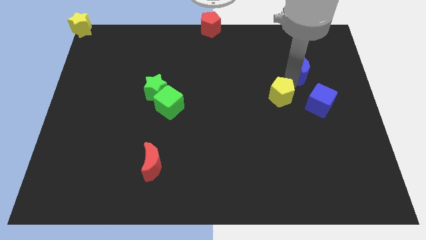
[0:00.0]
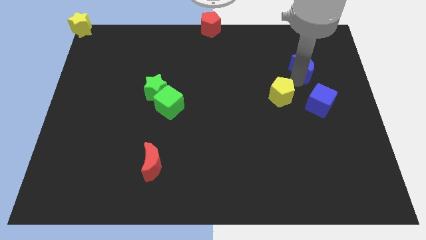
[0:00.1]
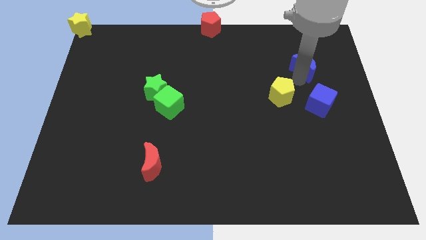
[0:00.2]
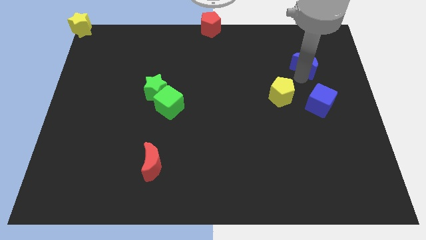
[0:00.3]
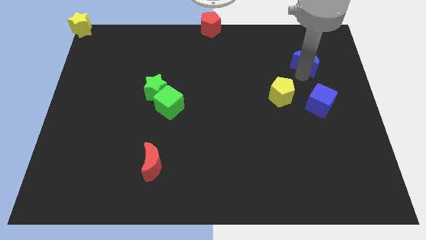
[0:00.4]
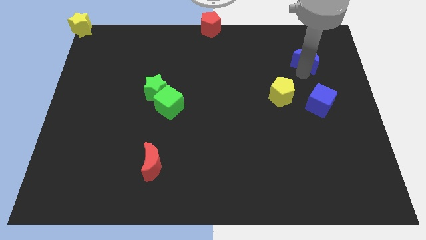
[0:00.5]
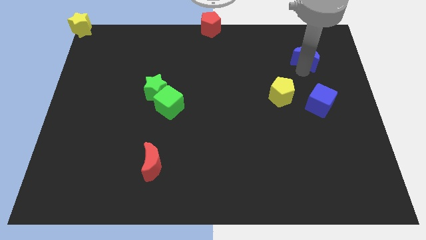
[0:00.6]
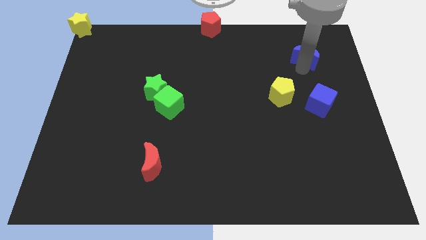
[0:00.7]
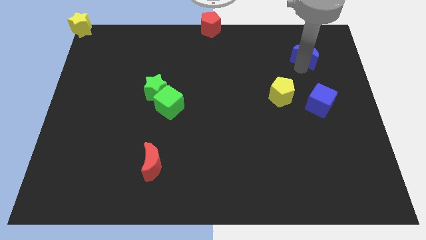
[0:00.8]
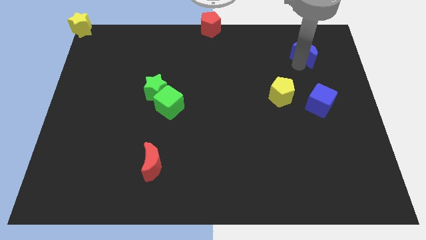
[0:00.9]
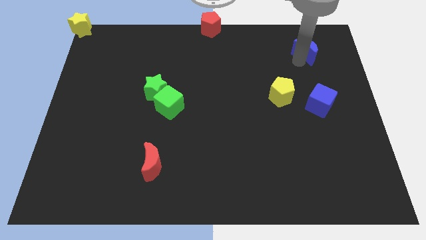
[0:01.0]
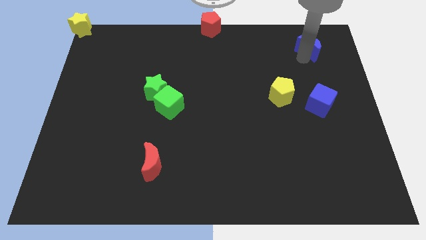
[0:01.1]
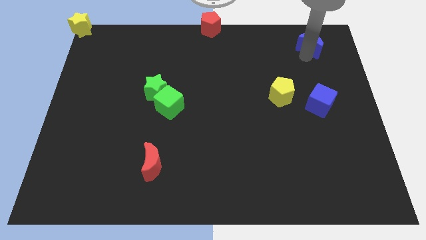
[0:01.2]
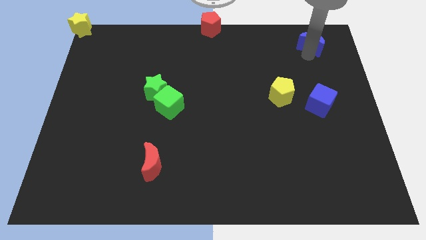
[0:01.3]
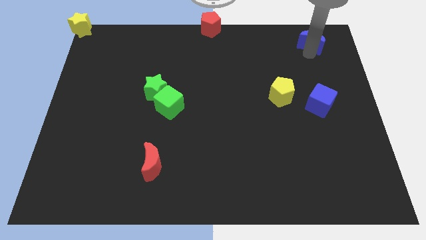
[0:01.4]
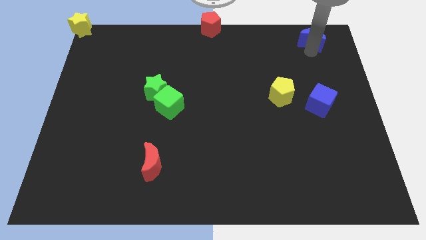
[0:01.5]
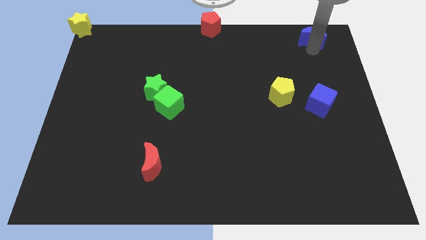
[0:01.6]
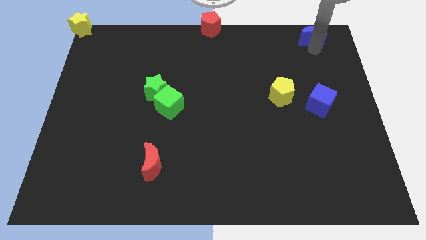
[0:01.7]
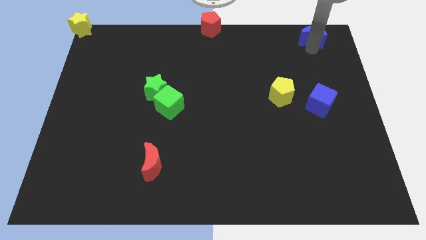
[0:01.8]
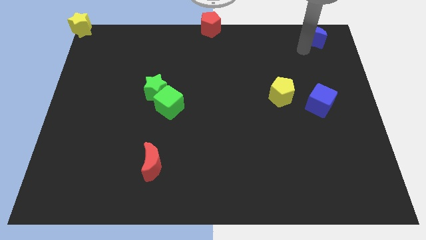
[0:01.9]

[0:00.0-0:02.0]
take the blue moon towards the top right side of the board

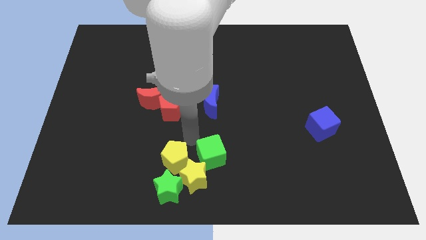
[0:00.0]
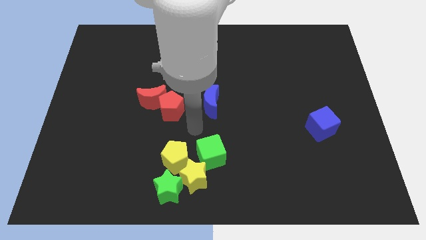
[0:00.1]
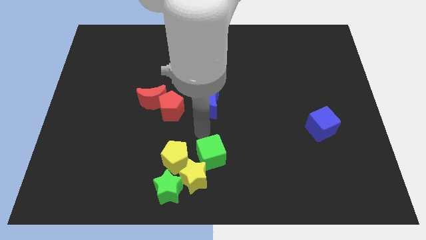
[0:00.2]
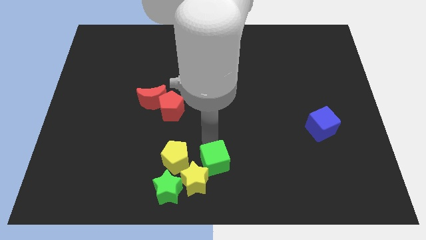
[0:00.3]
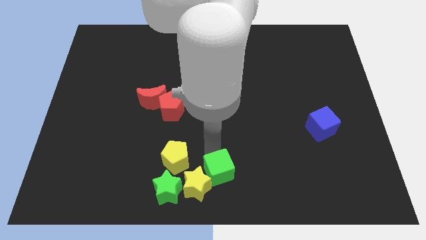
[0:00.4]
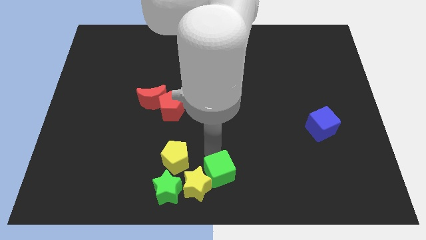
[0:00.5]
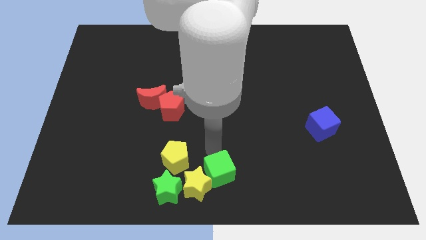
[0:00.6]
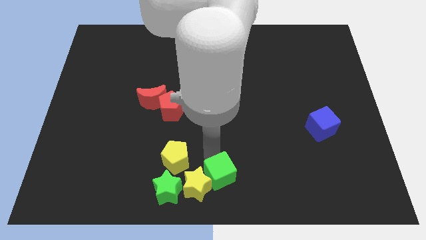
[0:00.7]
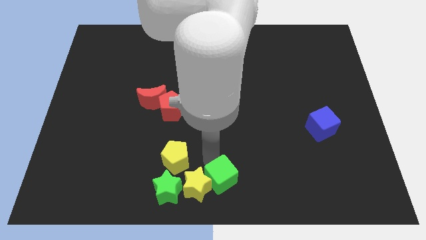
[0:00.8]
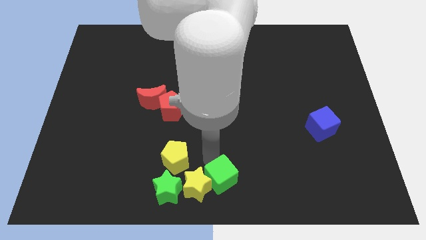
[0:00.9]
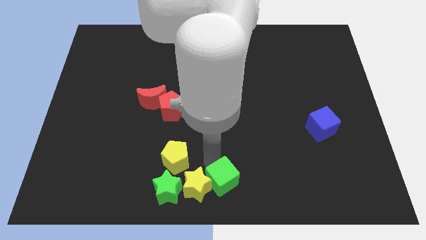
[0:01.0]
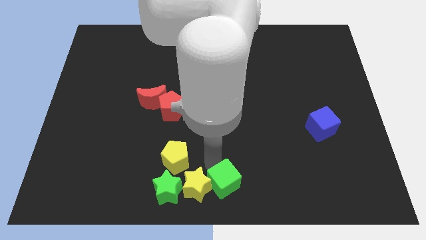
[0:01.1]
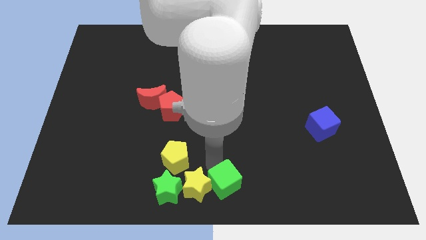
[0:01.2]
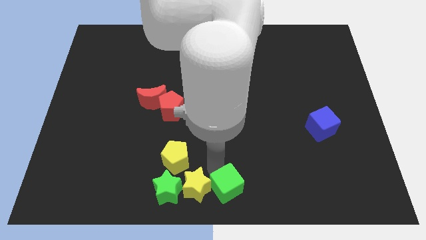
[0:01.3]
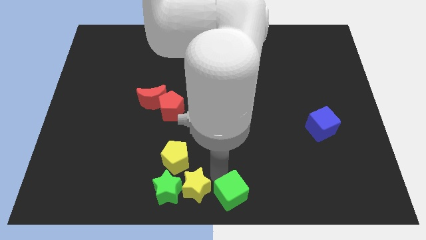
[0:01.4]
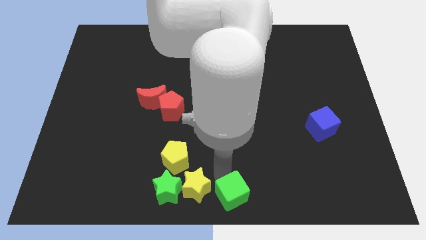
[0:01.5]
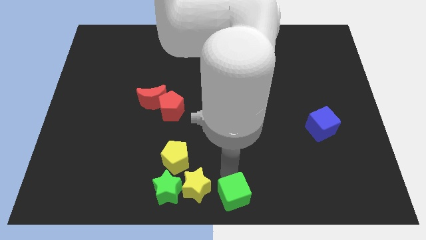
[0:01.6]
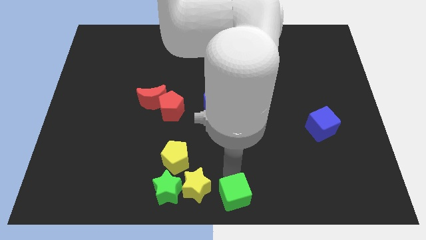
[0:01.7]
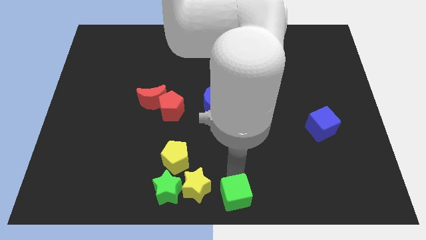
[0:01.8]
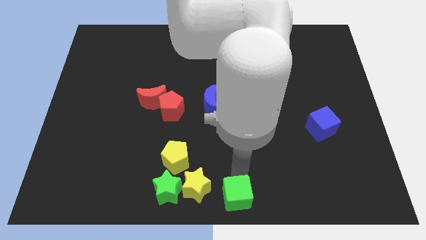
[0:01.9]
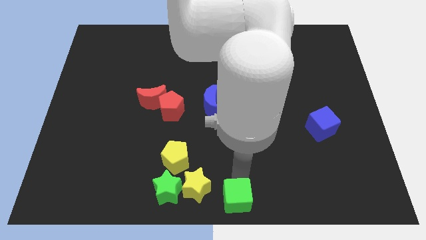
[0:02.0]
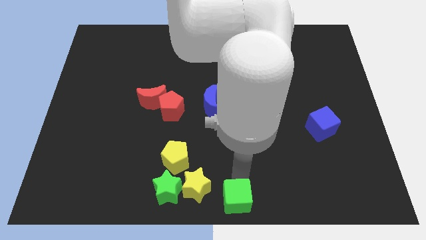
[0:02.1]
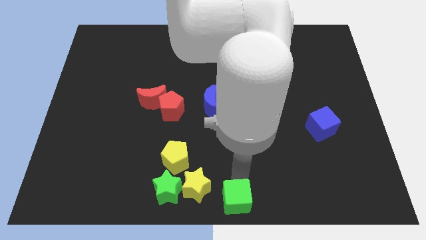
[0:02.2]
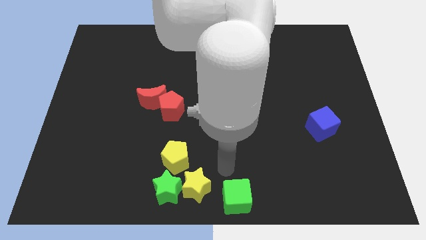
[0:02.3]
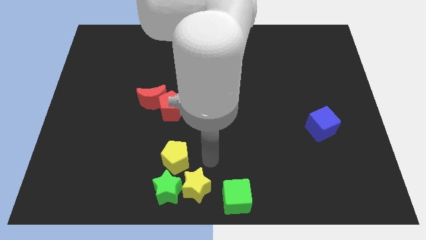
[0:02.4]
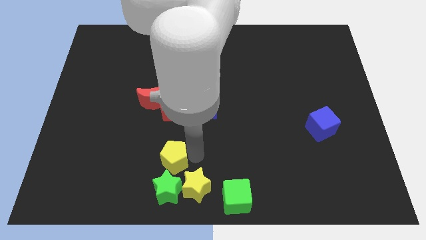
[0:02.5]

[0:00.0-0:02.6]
move the green cube to the bottom center of the board

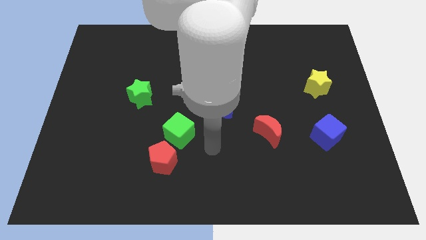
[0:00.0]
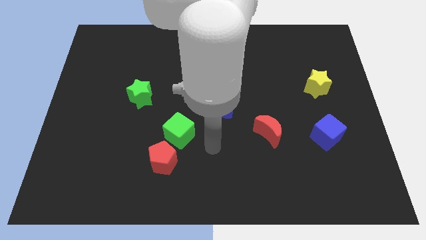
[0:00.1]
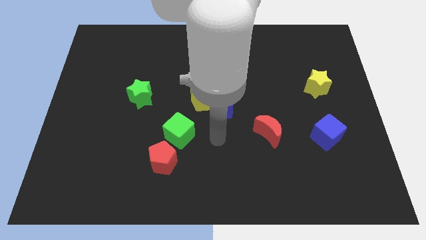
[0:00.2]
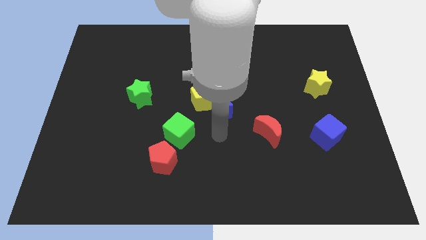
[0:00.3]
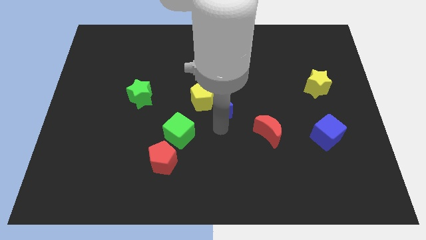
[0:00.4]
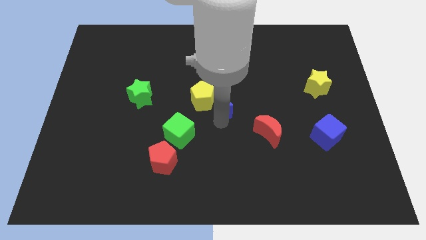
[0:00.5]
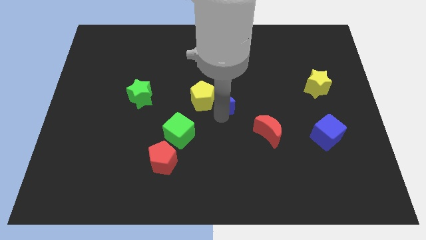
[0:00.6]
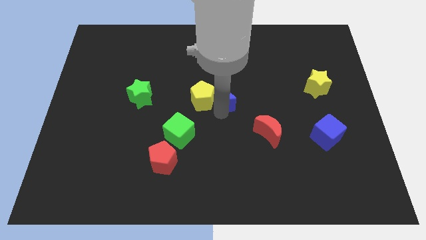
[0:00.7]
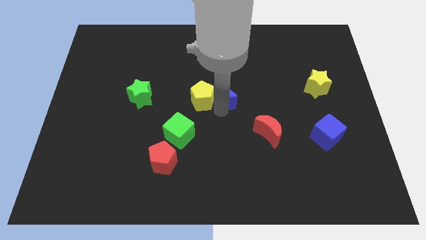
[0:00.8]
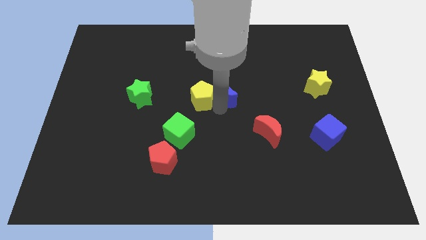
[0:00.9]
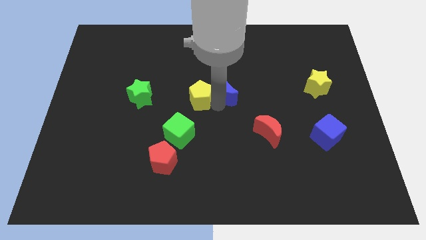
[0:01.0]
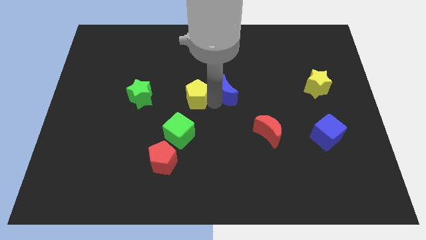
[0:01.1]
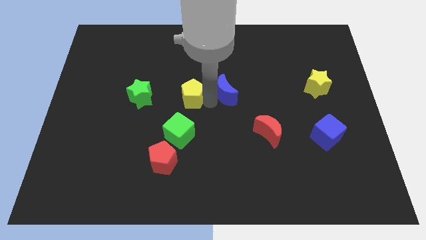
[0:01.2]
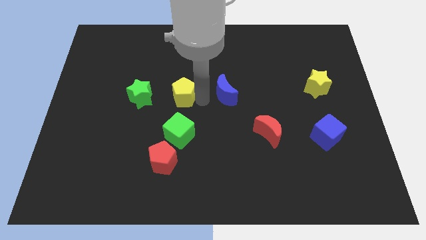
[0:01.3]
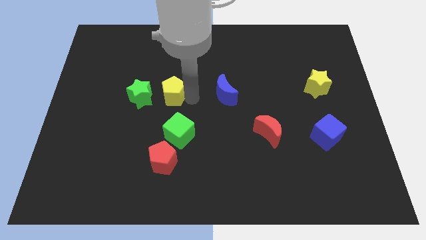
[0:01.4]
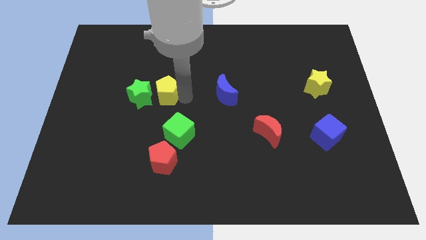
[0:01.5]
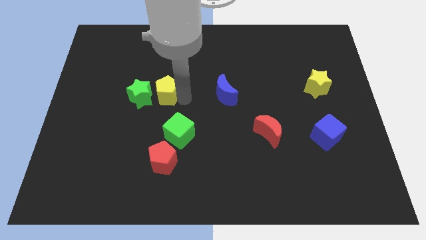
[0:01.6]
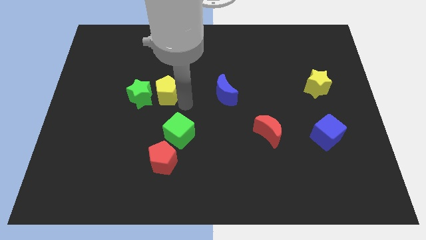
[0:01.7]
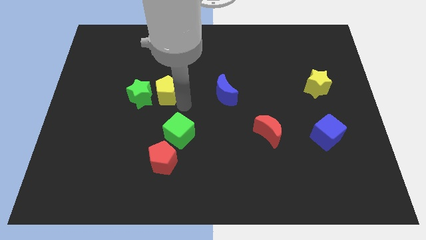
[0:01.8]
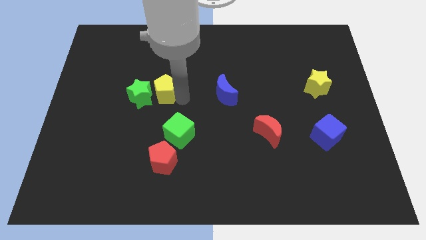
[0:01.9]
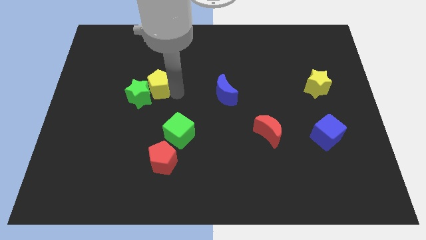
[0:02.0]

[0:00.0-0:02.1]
slide the yellow pentagon to the top right side of the green star

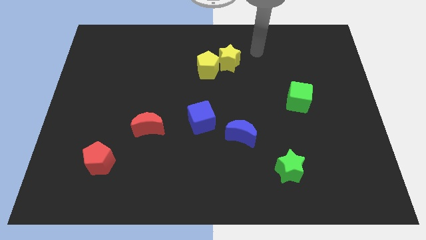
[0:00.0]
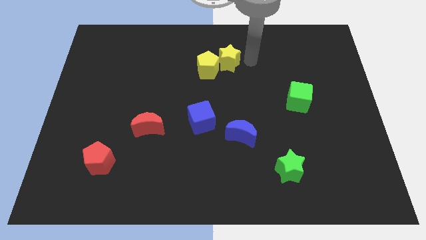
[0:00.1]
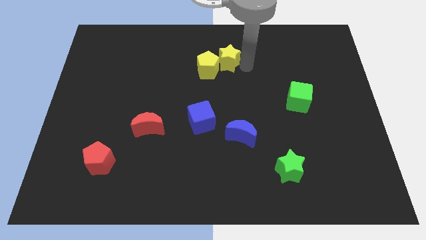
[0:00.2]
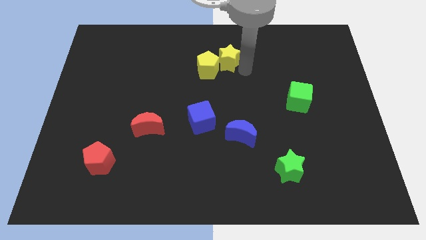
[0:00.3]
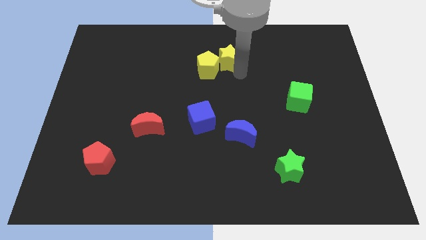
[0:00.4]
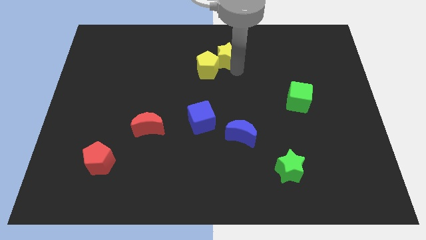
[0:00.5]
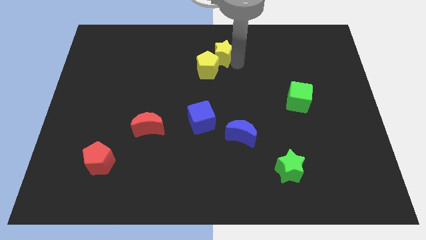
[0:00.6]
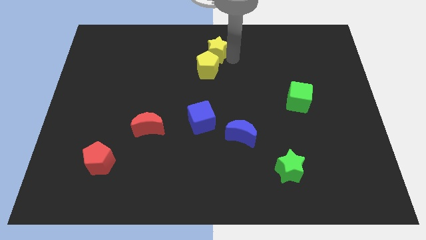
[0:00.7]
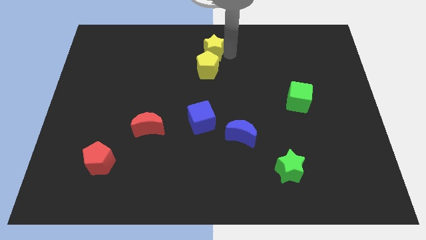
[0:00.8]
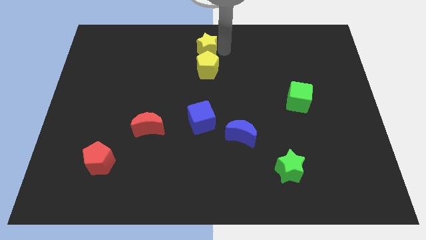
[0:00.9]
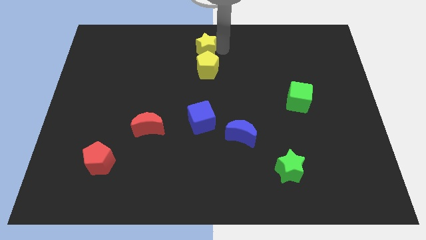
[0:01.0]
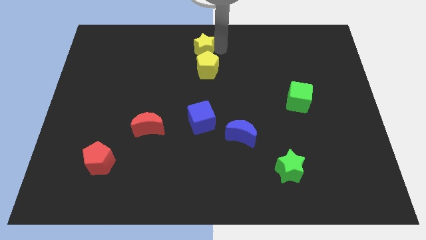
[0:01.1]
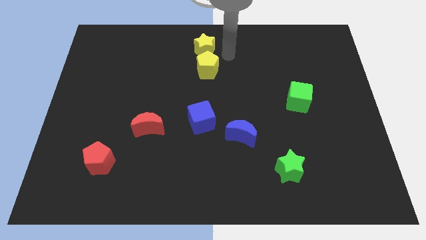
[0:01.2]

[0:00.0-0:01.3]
place the yellow star on top of the yellow pentagon

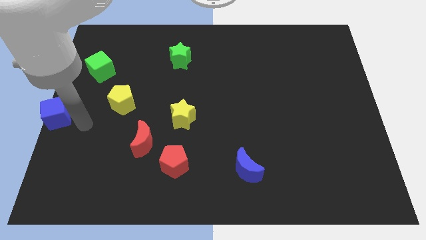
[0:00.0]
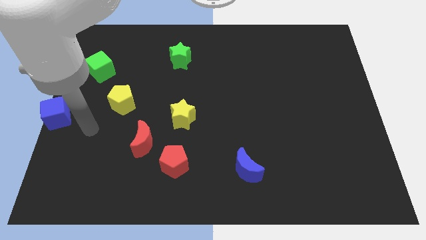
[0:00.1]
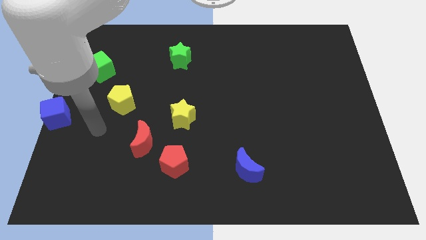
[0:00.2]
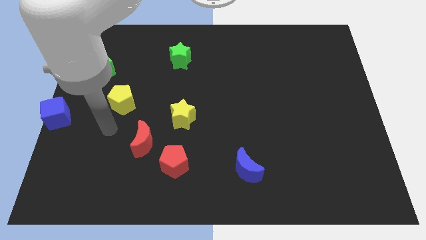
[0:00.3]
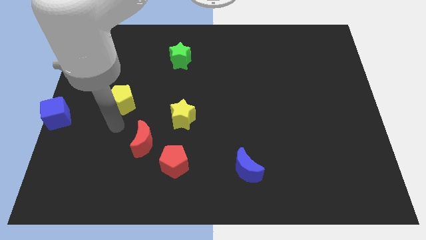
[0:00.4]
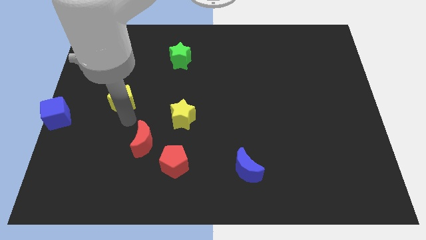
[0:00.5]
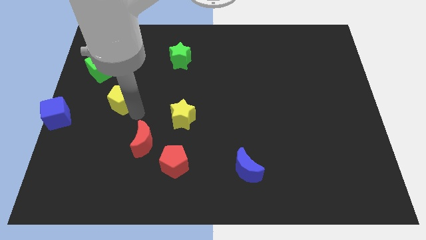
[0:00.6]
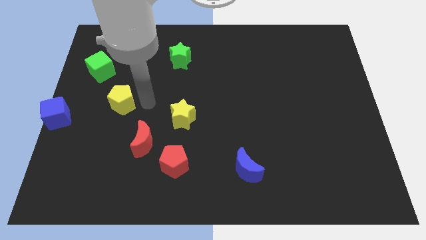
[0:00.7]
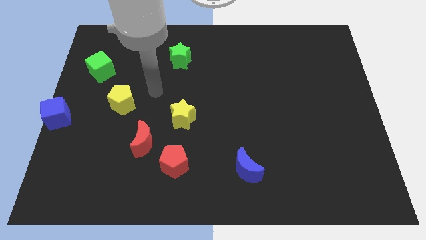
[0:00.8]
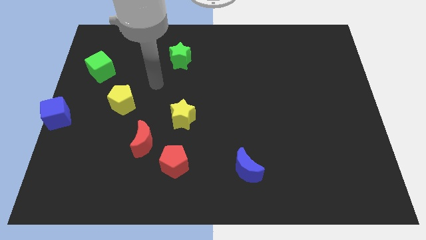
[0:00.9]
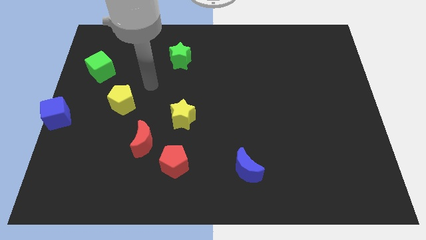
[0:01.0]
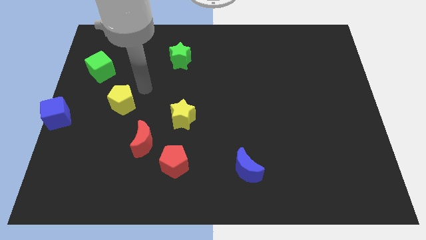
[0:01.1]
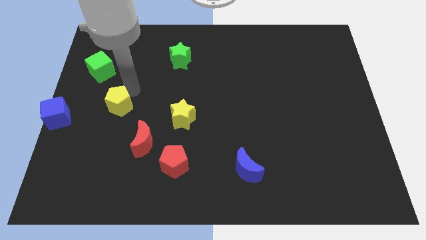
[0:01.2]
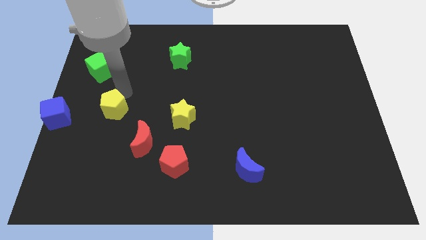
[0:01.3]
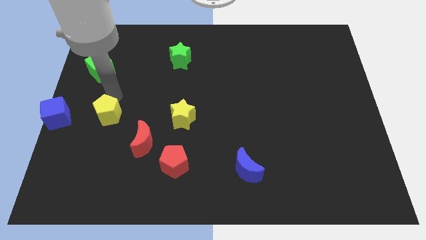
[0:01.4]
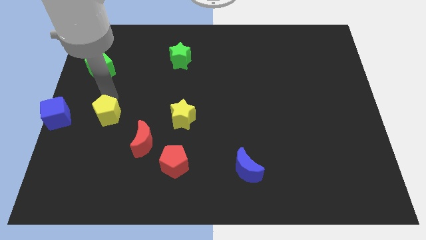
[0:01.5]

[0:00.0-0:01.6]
push the yellow pentagon slightly towards down
